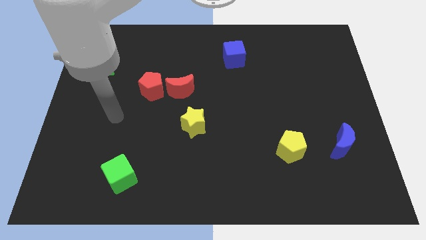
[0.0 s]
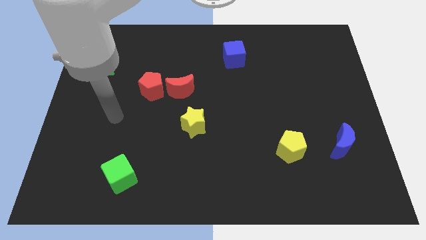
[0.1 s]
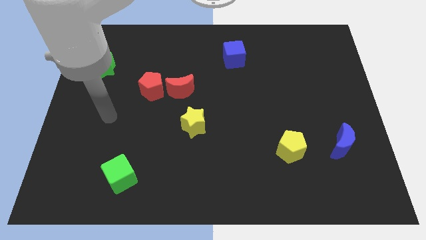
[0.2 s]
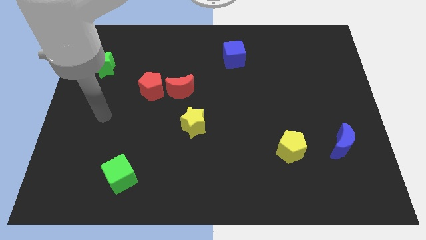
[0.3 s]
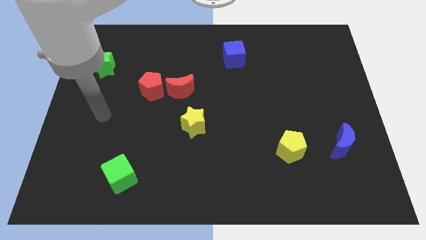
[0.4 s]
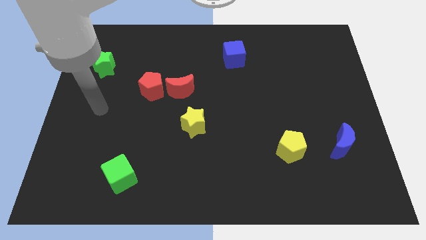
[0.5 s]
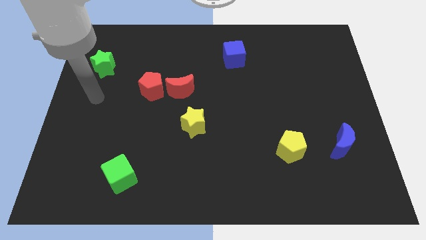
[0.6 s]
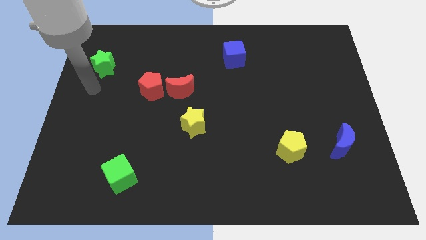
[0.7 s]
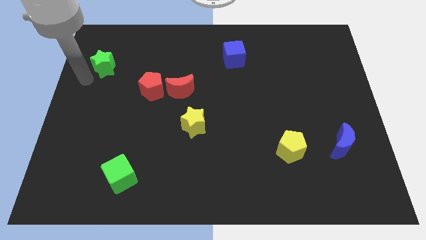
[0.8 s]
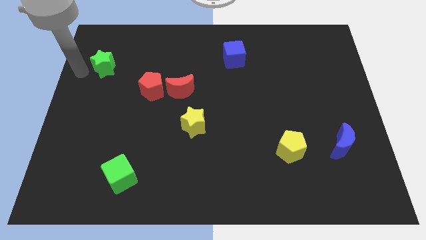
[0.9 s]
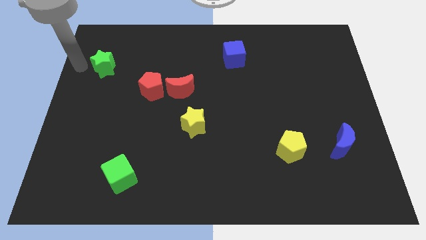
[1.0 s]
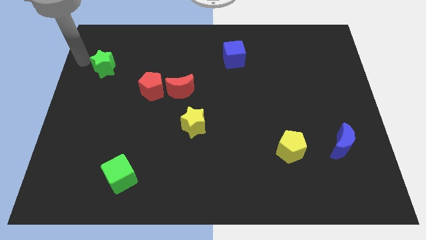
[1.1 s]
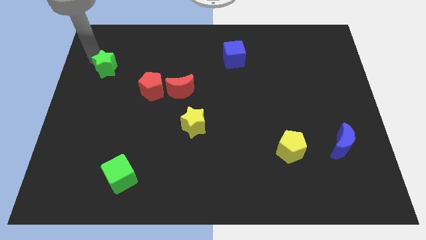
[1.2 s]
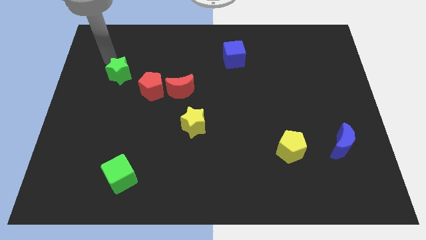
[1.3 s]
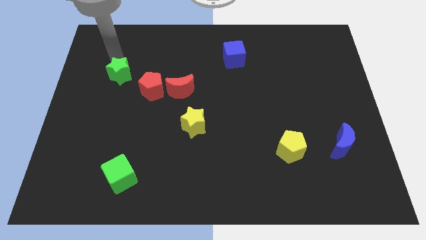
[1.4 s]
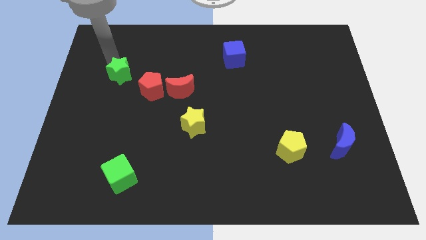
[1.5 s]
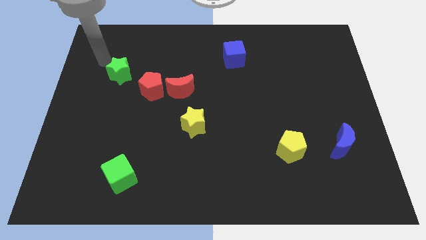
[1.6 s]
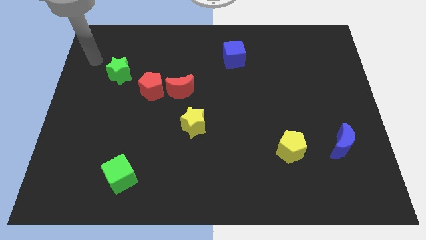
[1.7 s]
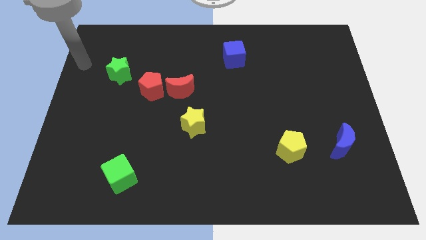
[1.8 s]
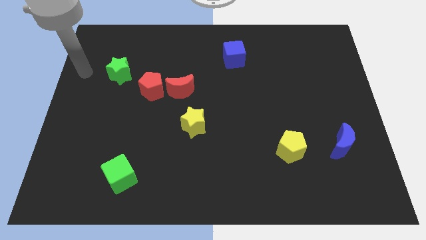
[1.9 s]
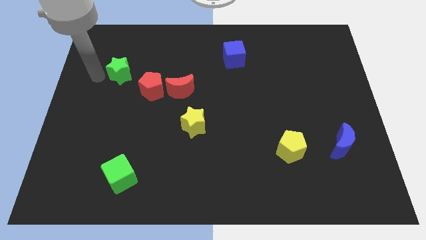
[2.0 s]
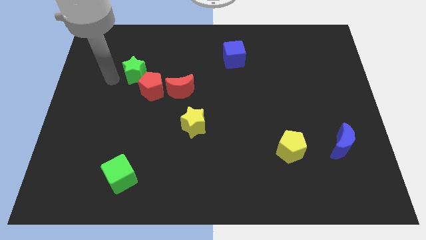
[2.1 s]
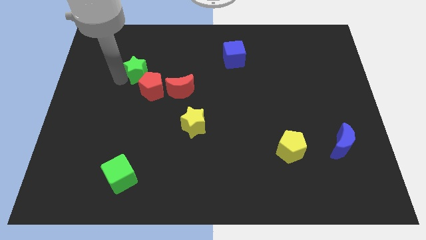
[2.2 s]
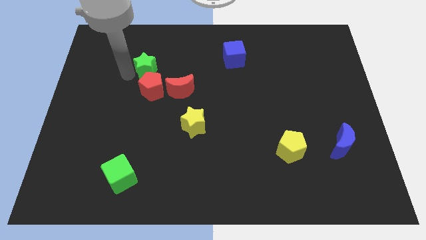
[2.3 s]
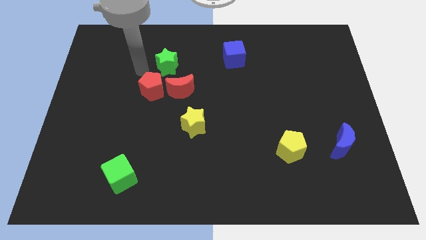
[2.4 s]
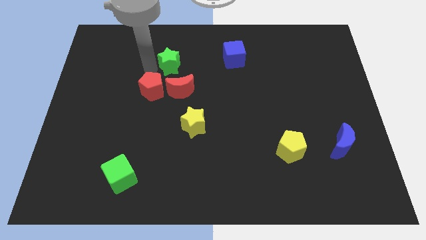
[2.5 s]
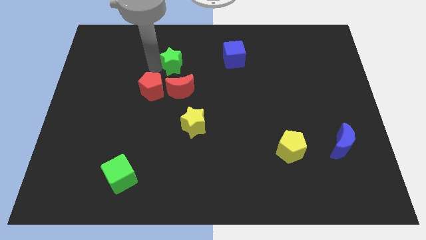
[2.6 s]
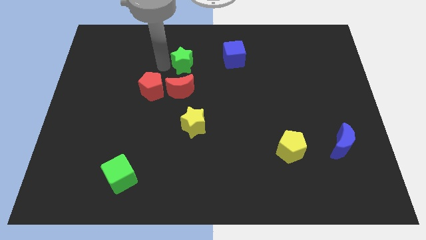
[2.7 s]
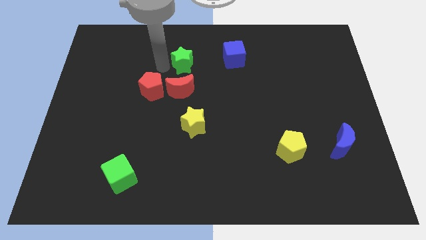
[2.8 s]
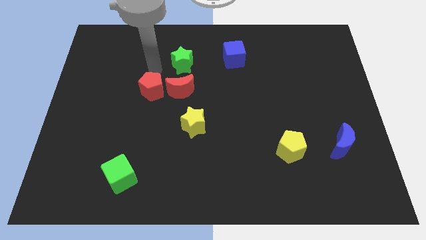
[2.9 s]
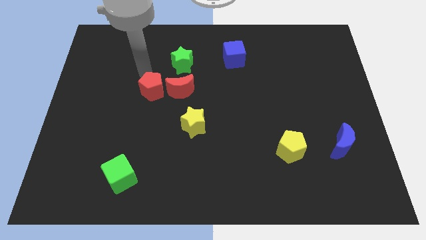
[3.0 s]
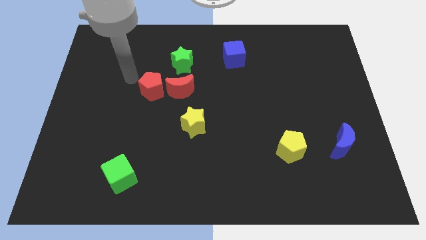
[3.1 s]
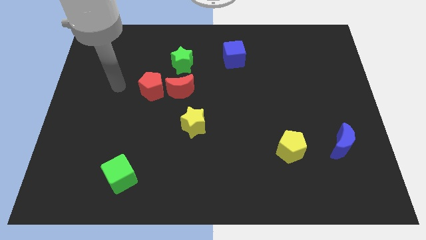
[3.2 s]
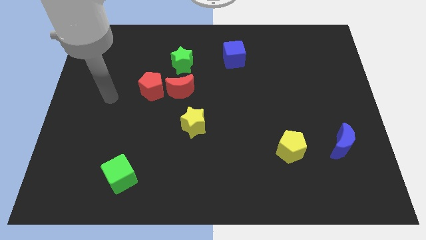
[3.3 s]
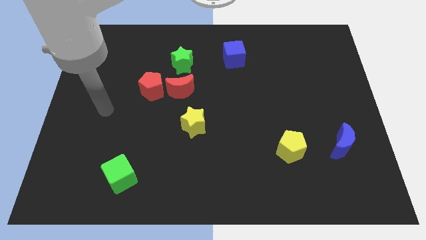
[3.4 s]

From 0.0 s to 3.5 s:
put the green star above the red crescent

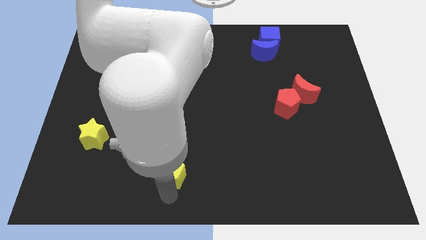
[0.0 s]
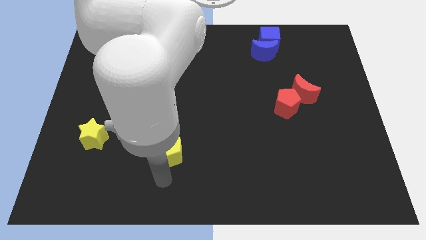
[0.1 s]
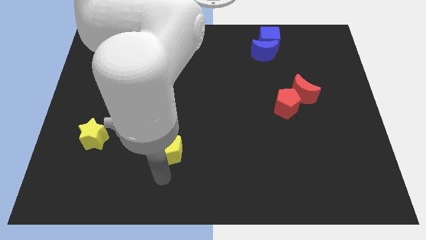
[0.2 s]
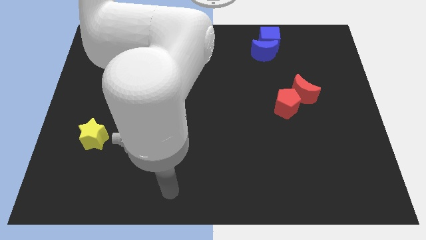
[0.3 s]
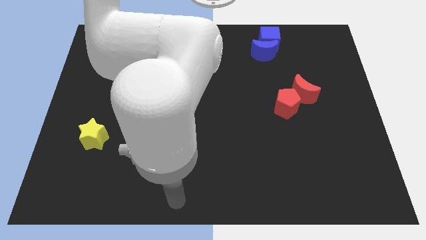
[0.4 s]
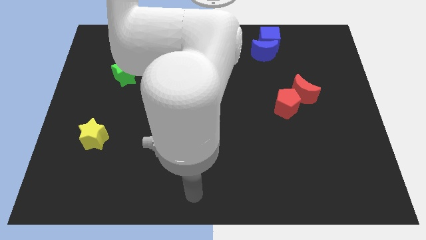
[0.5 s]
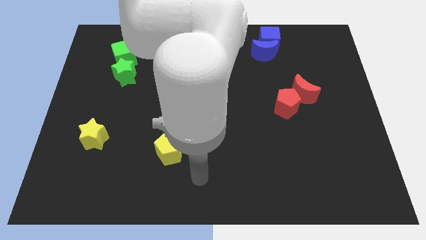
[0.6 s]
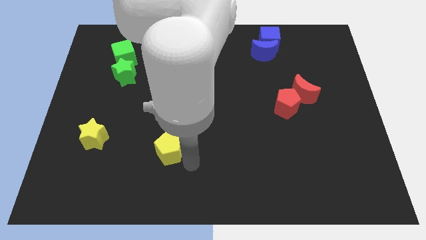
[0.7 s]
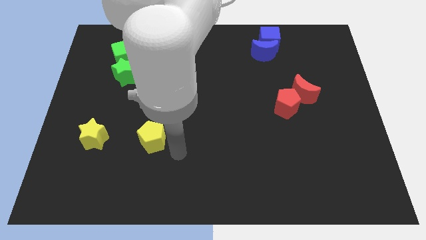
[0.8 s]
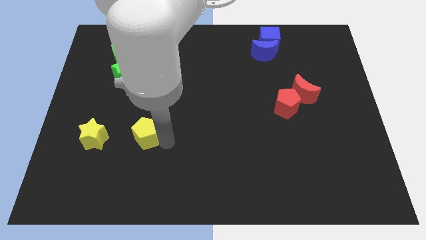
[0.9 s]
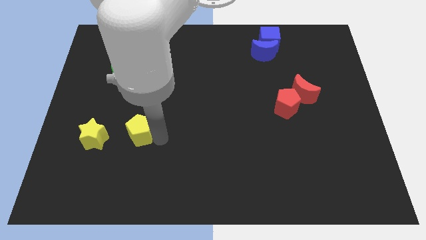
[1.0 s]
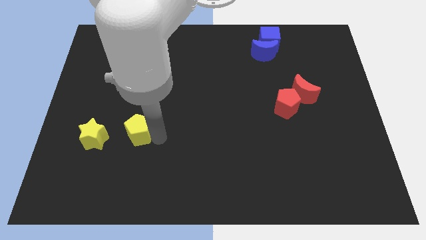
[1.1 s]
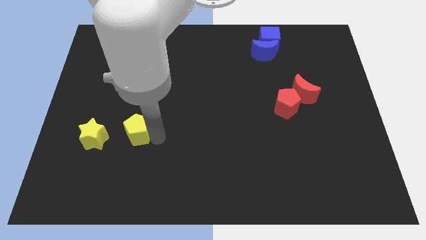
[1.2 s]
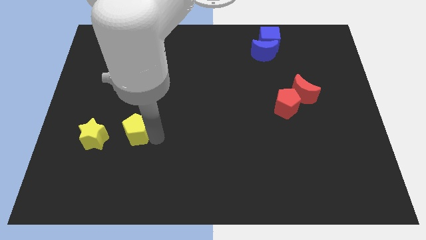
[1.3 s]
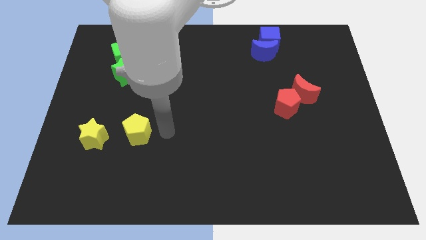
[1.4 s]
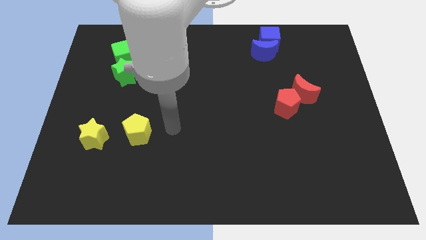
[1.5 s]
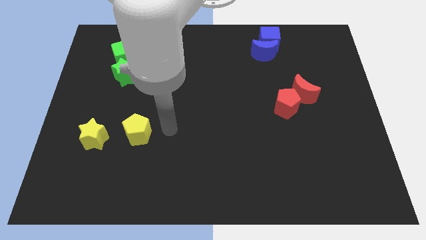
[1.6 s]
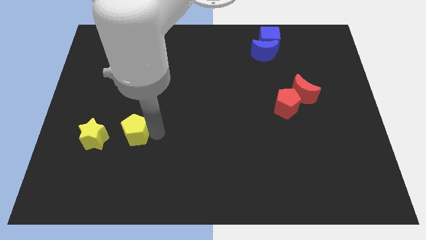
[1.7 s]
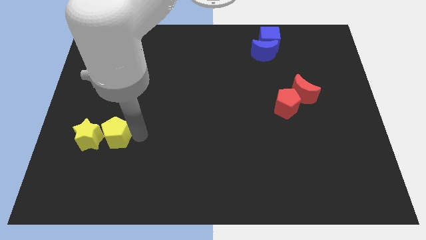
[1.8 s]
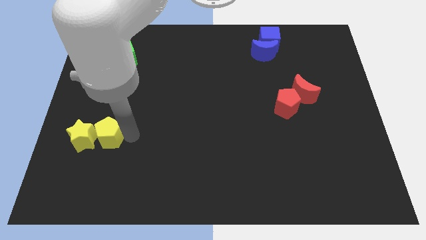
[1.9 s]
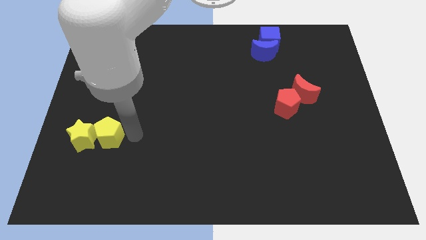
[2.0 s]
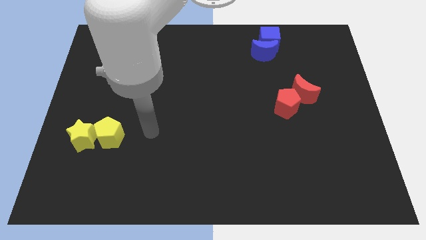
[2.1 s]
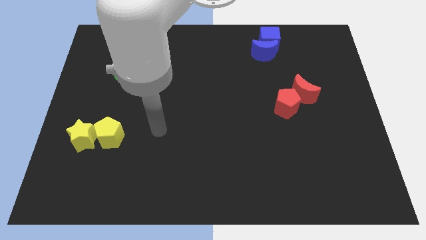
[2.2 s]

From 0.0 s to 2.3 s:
push the yellow pentagon into the yellow star

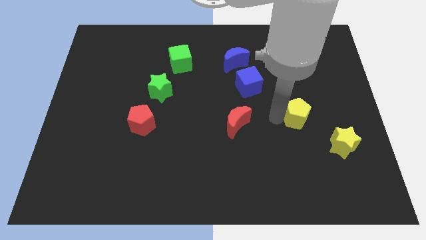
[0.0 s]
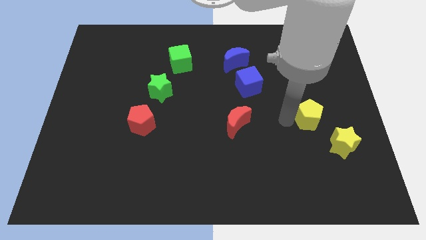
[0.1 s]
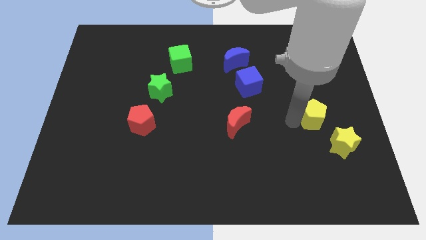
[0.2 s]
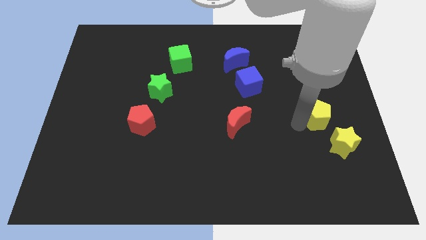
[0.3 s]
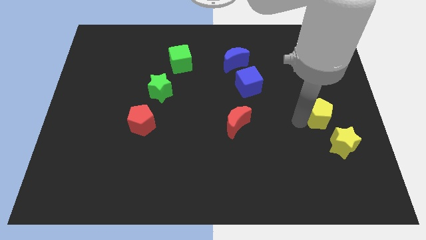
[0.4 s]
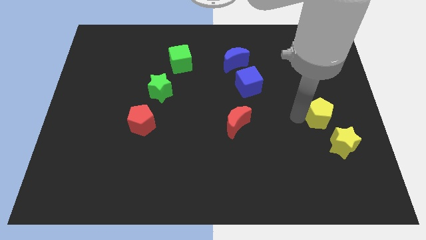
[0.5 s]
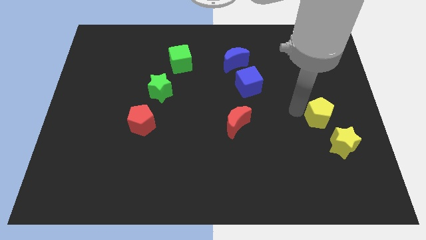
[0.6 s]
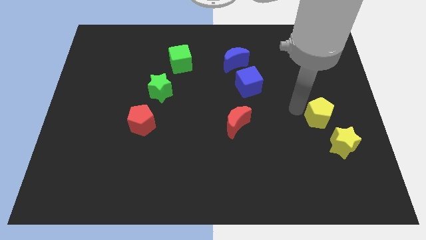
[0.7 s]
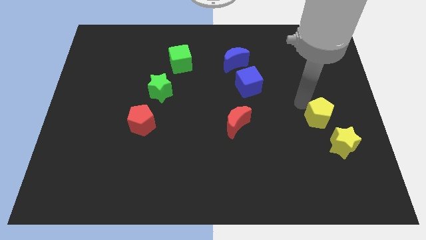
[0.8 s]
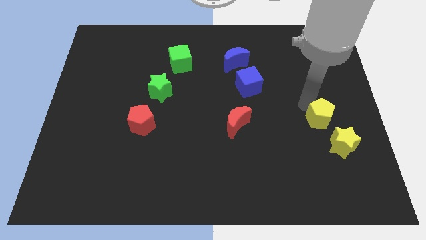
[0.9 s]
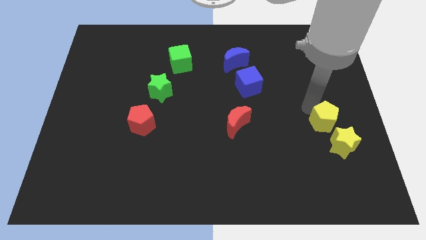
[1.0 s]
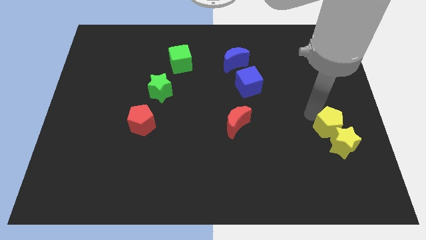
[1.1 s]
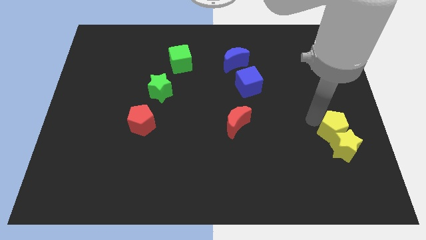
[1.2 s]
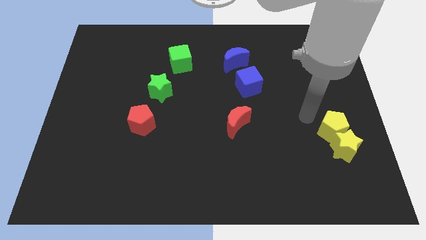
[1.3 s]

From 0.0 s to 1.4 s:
move the yellow pentagon into the top side of the yellow star

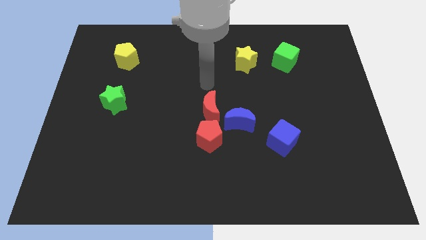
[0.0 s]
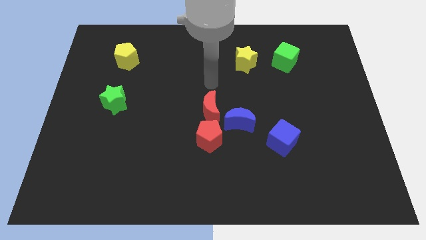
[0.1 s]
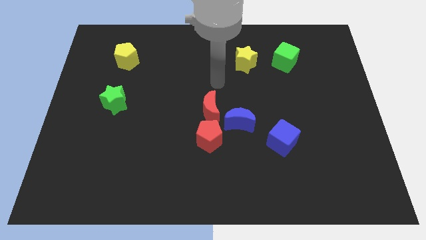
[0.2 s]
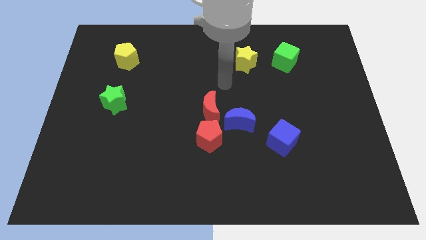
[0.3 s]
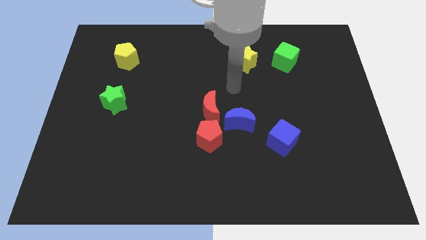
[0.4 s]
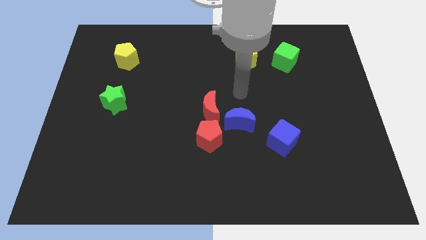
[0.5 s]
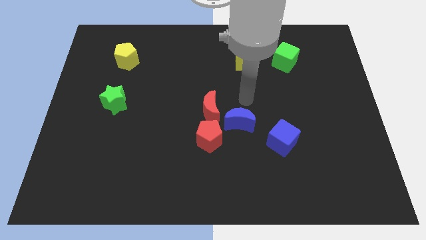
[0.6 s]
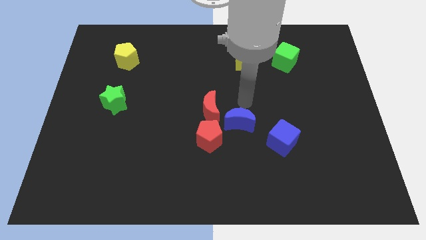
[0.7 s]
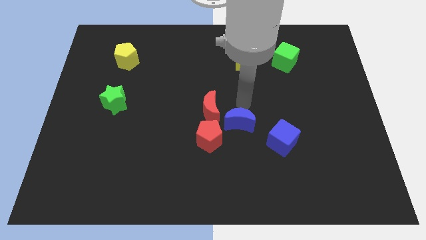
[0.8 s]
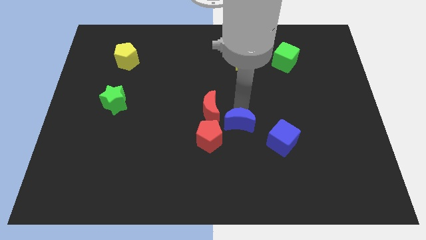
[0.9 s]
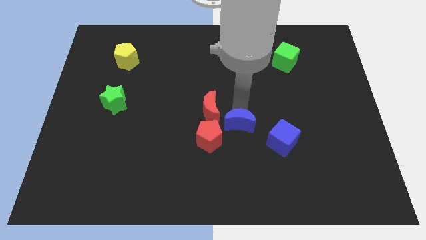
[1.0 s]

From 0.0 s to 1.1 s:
slightly push the blue crescent to top

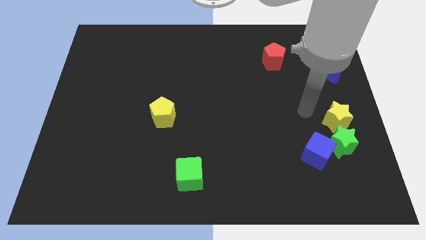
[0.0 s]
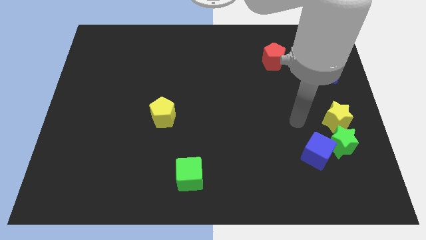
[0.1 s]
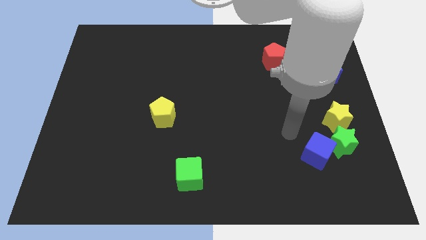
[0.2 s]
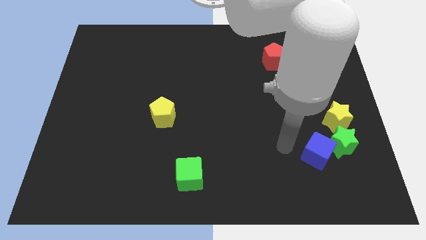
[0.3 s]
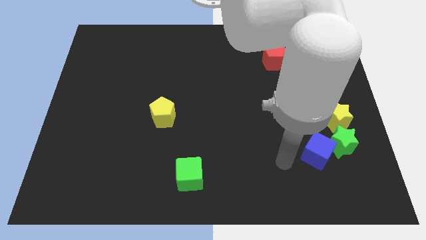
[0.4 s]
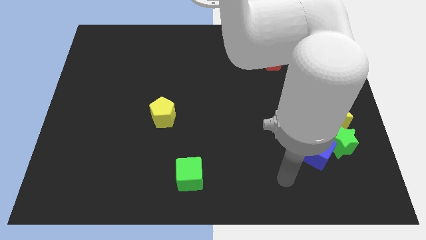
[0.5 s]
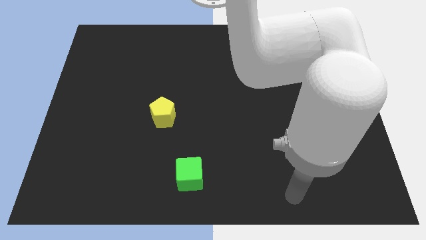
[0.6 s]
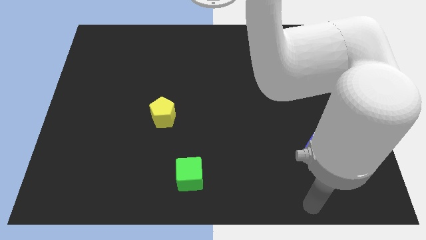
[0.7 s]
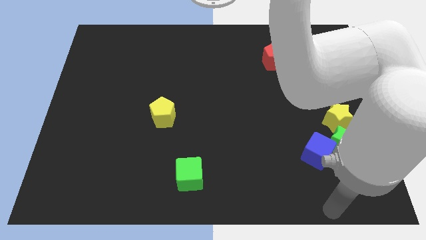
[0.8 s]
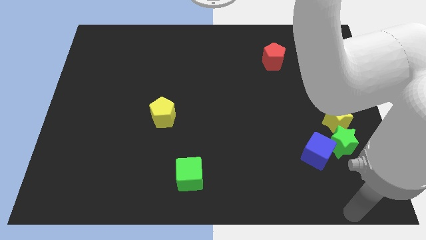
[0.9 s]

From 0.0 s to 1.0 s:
move your arm towards right bottom
